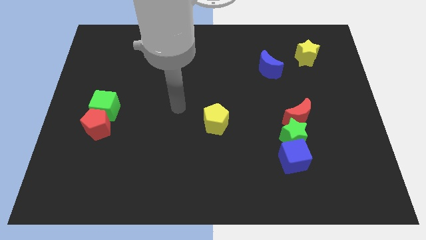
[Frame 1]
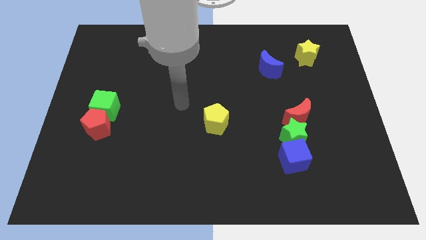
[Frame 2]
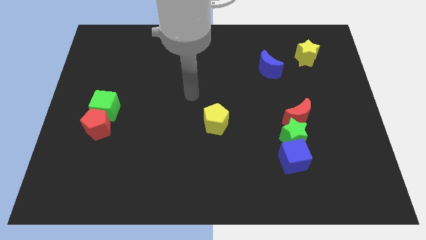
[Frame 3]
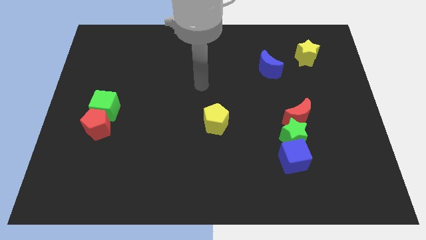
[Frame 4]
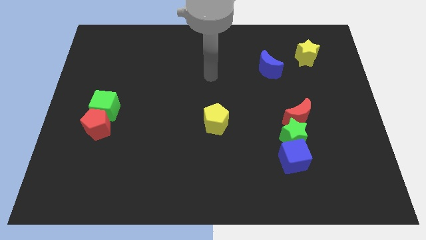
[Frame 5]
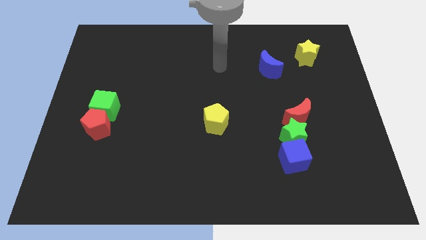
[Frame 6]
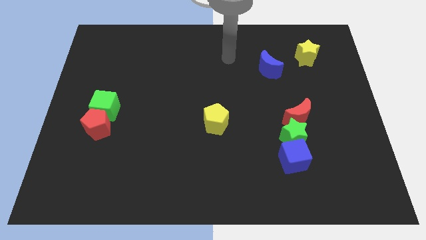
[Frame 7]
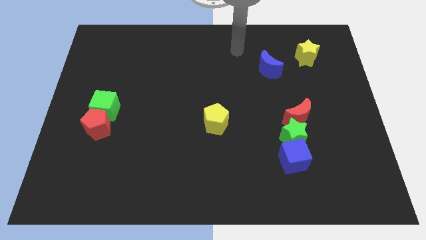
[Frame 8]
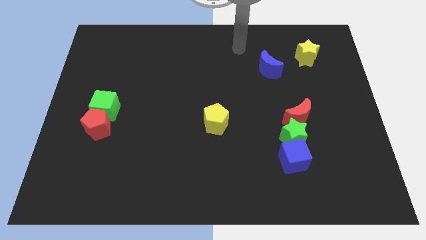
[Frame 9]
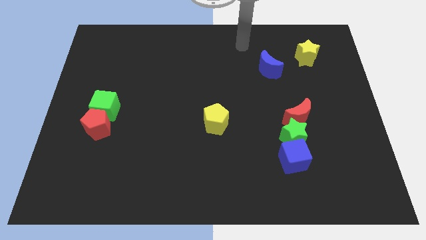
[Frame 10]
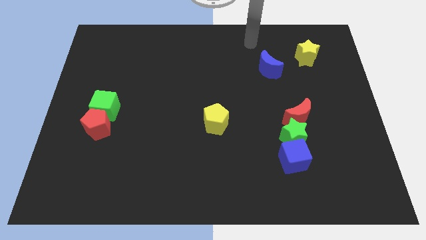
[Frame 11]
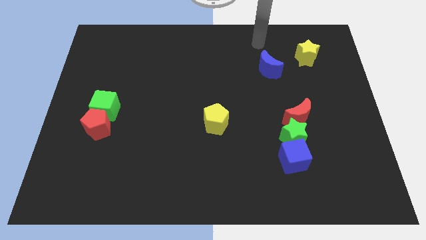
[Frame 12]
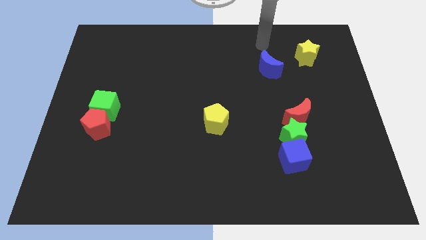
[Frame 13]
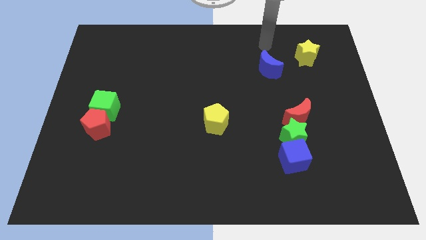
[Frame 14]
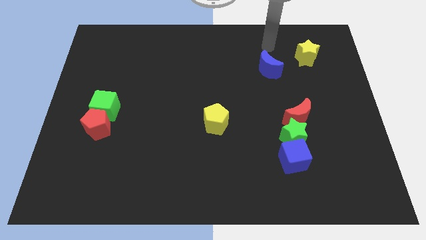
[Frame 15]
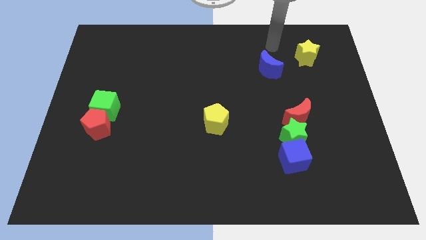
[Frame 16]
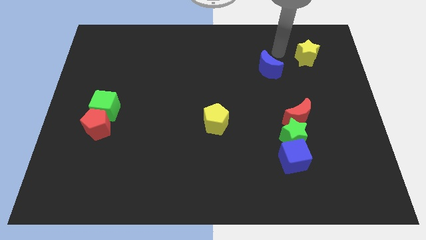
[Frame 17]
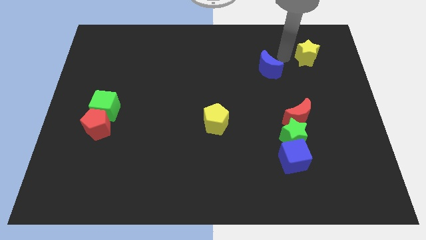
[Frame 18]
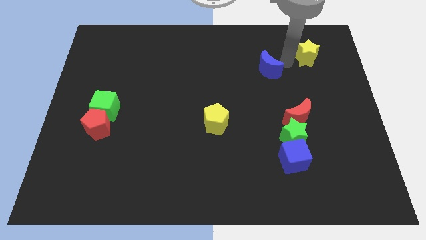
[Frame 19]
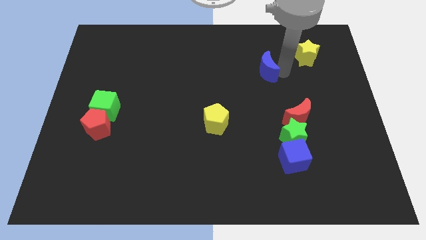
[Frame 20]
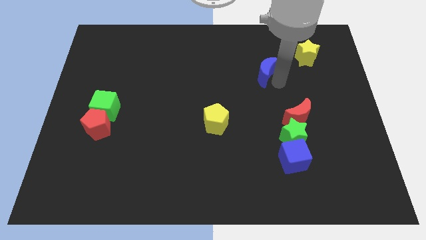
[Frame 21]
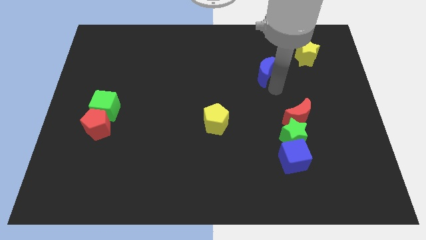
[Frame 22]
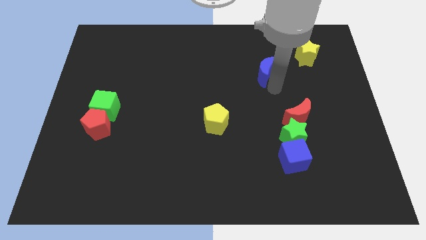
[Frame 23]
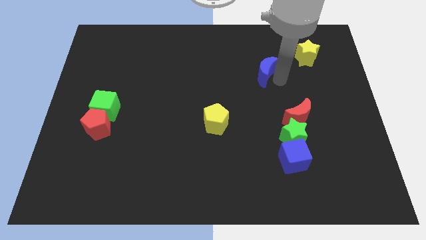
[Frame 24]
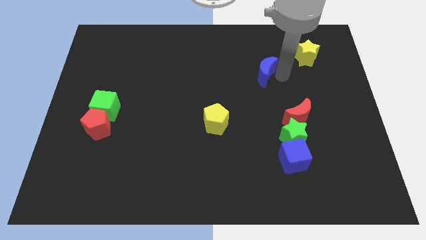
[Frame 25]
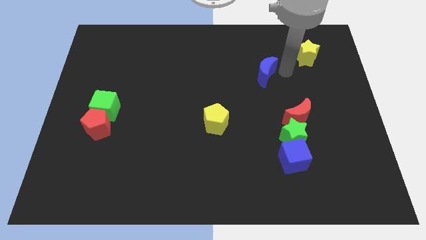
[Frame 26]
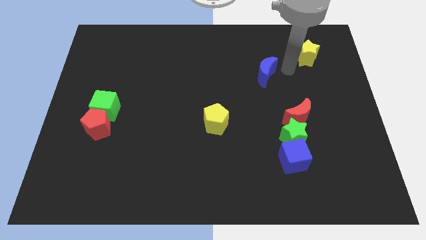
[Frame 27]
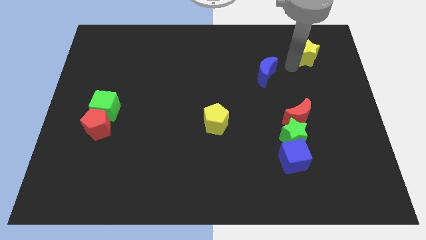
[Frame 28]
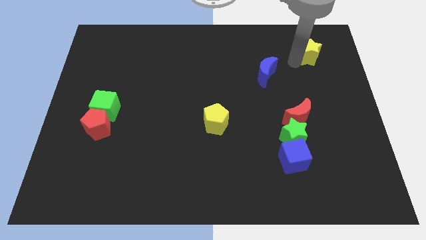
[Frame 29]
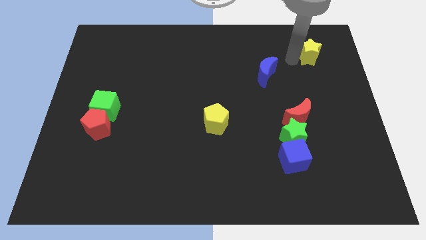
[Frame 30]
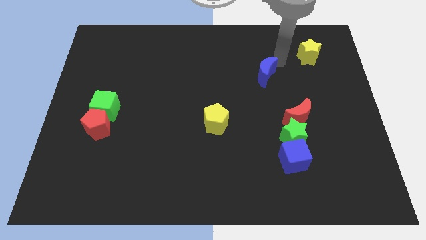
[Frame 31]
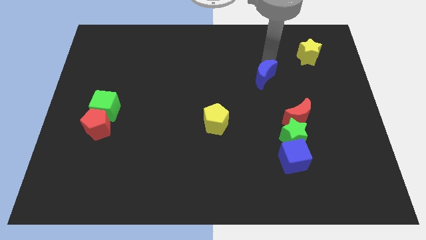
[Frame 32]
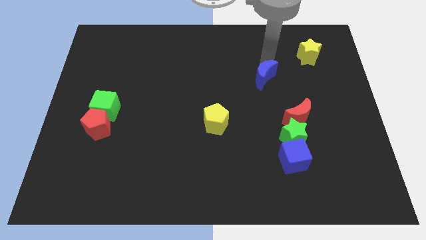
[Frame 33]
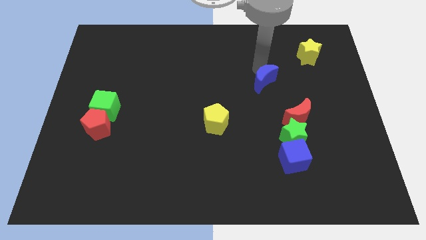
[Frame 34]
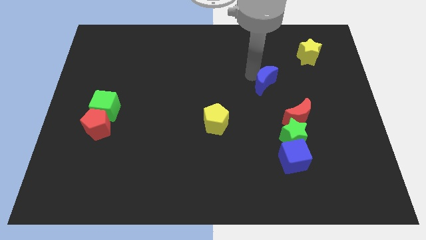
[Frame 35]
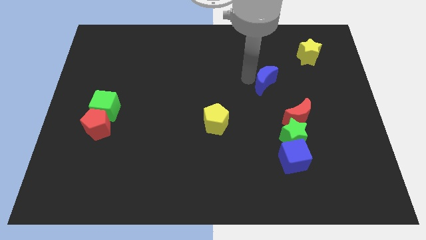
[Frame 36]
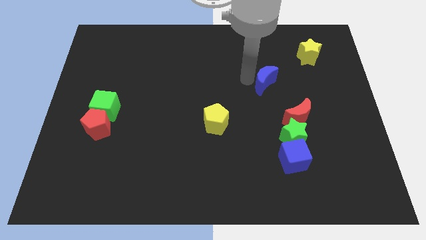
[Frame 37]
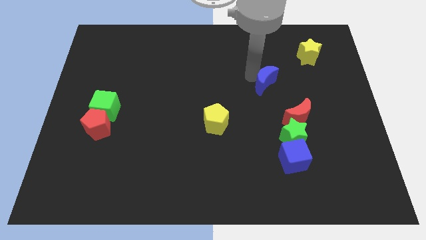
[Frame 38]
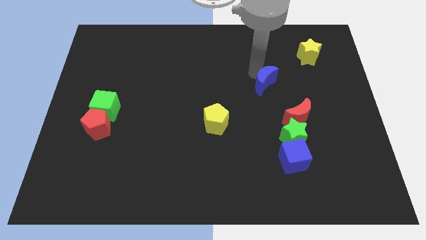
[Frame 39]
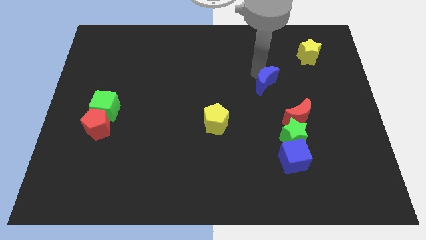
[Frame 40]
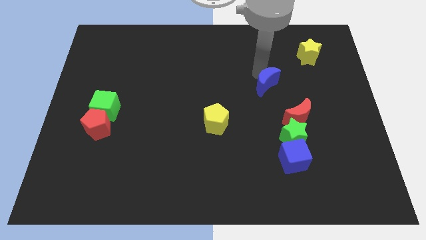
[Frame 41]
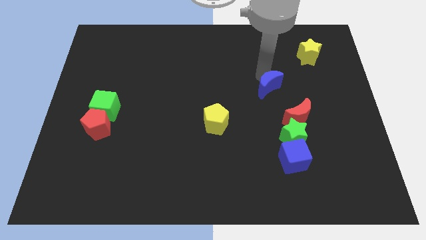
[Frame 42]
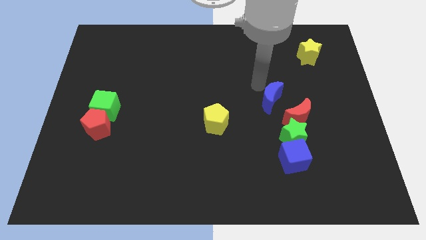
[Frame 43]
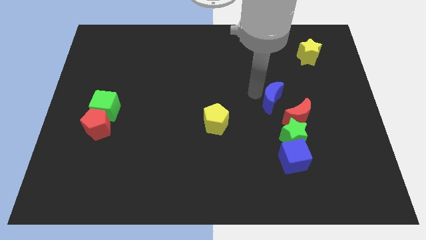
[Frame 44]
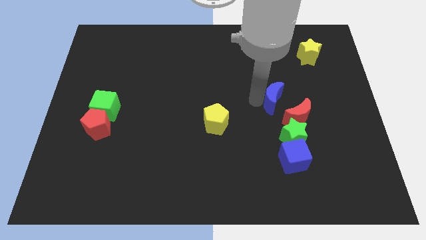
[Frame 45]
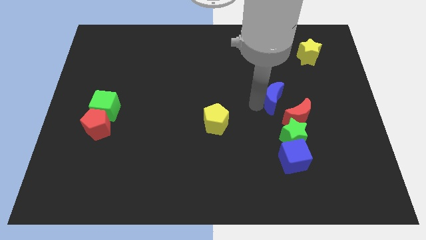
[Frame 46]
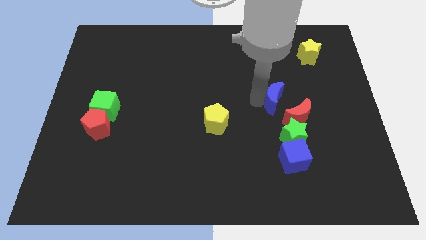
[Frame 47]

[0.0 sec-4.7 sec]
move the blue moon towards the red crescent

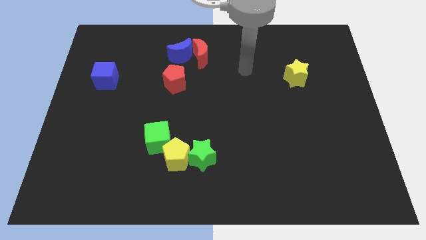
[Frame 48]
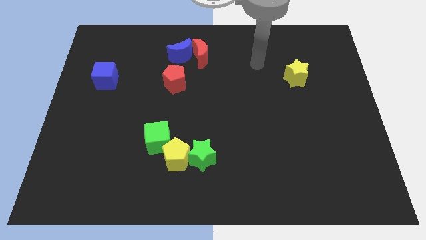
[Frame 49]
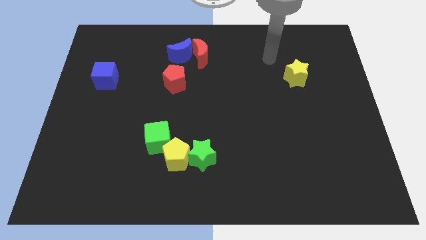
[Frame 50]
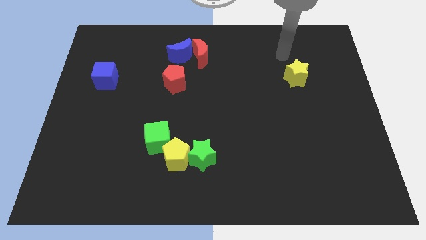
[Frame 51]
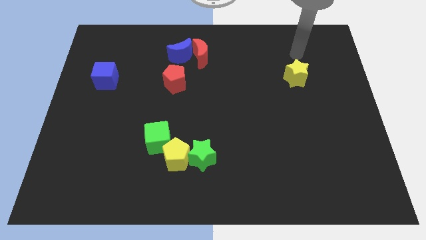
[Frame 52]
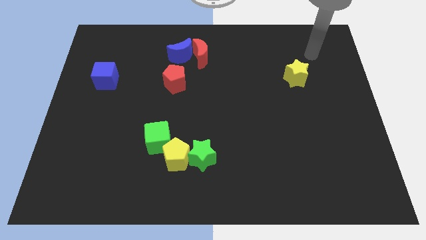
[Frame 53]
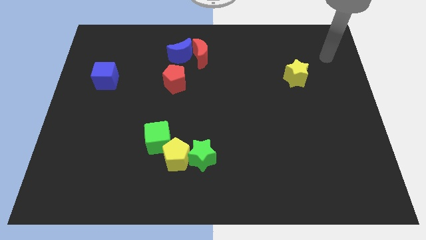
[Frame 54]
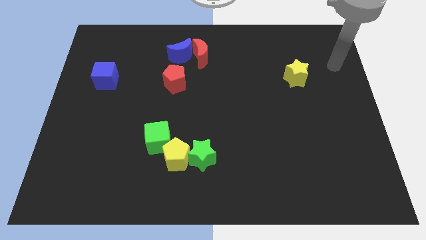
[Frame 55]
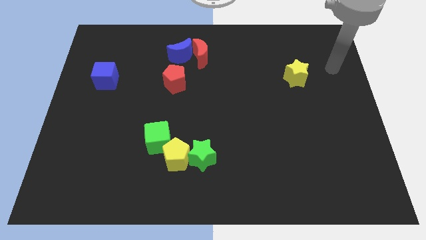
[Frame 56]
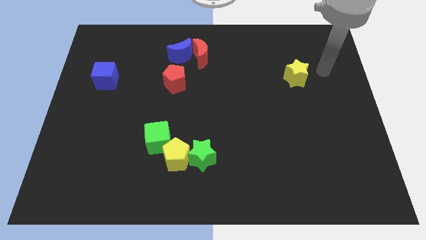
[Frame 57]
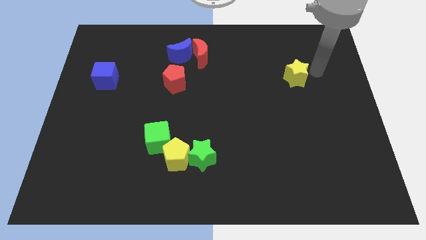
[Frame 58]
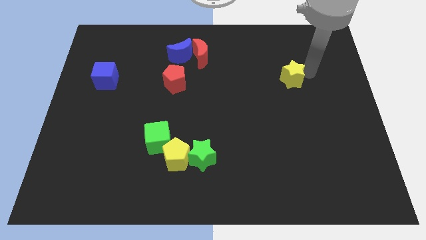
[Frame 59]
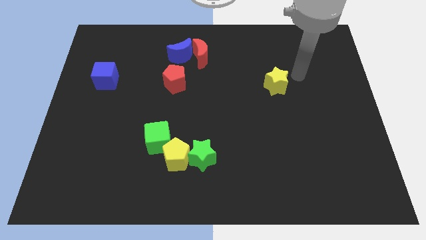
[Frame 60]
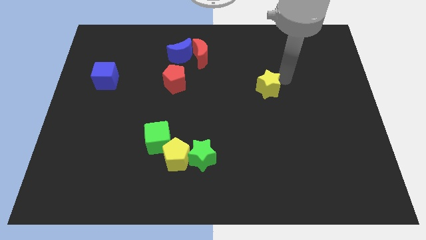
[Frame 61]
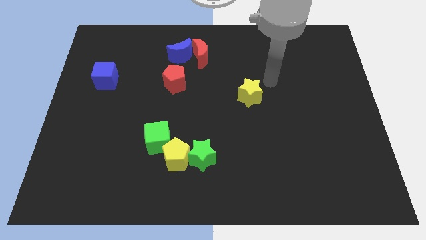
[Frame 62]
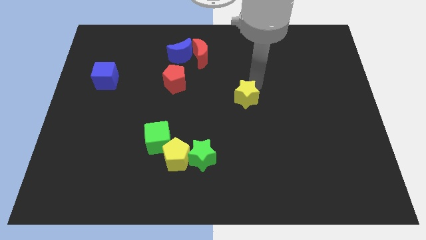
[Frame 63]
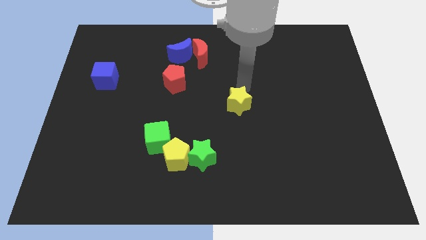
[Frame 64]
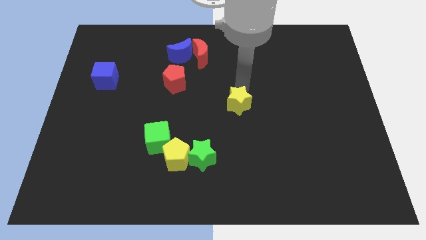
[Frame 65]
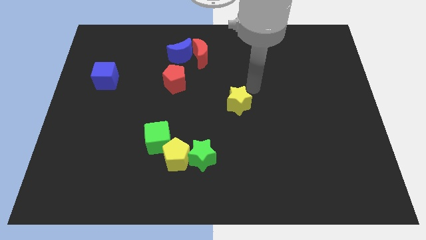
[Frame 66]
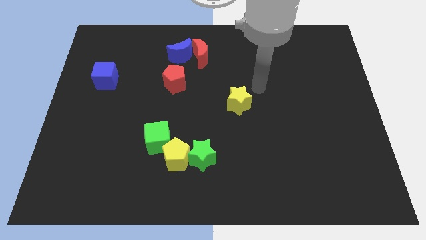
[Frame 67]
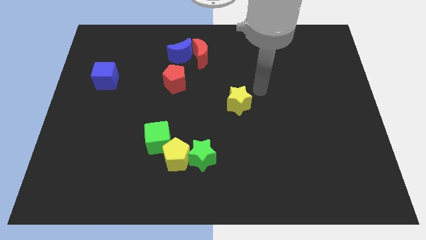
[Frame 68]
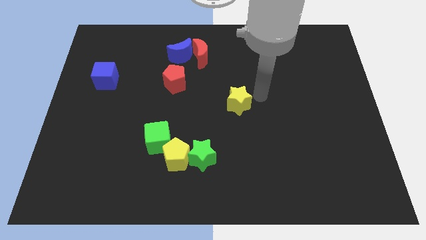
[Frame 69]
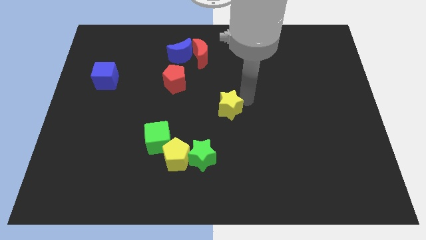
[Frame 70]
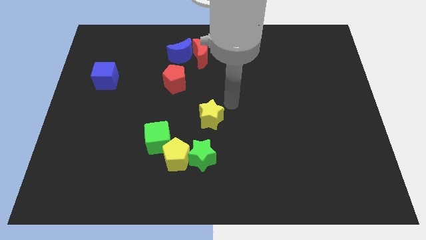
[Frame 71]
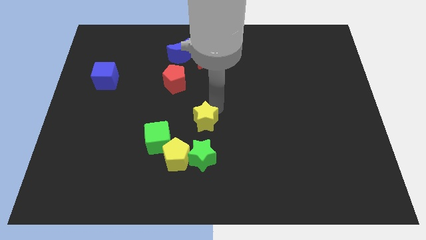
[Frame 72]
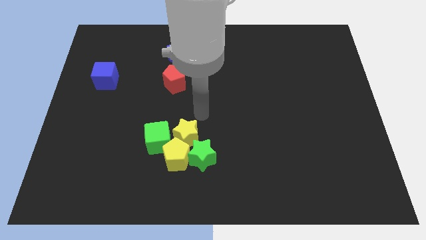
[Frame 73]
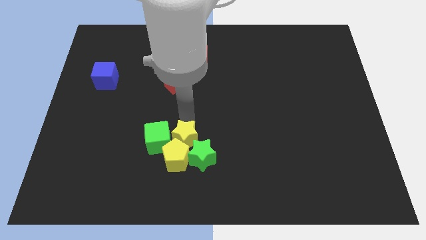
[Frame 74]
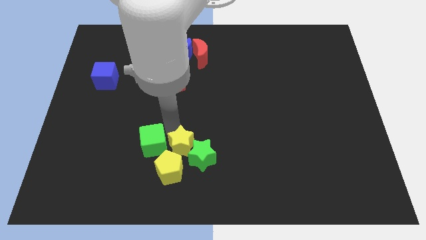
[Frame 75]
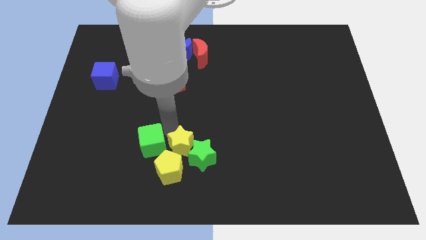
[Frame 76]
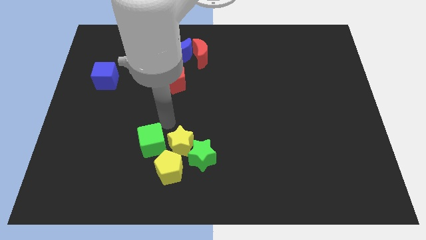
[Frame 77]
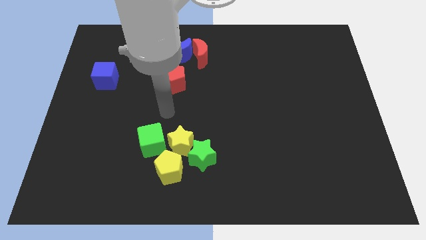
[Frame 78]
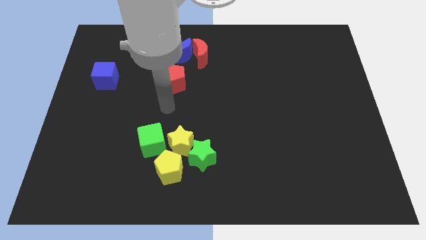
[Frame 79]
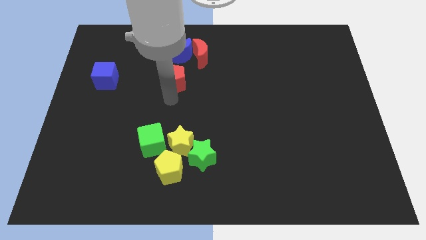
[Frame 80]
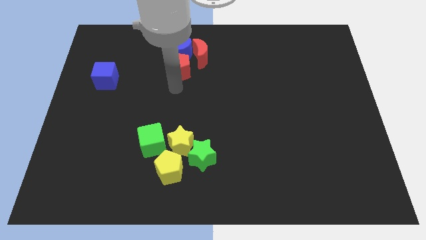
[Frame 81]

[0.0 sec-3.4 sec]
push the yellow star into the yellow pentagon

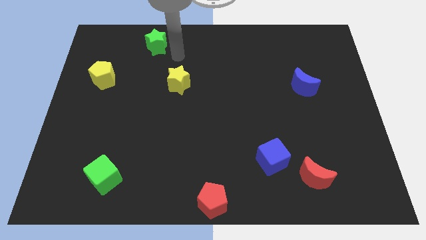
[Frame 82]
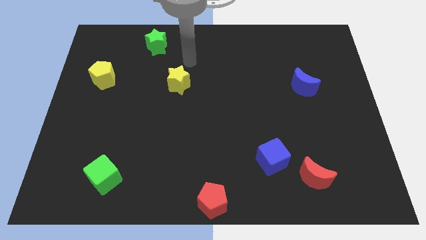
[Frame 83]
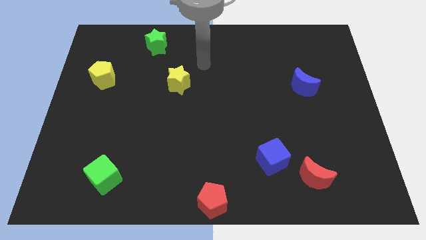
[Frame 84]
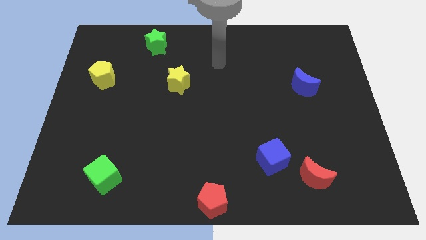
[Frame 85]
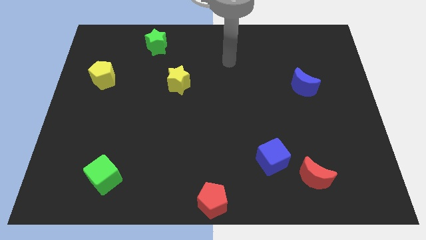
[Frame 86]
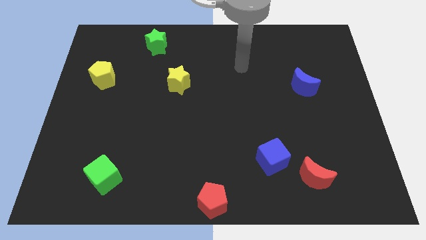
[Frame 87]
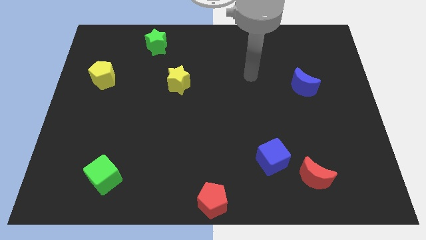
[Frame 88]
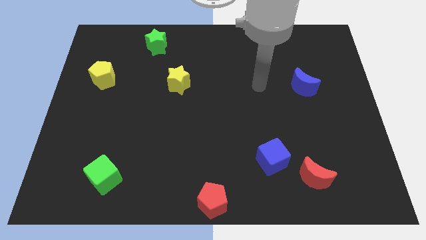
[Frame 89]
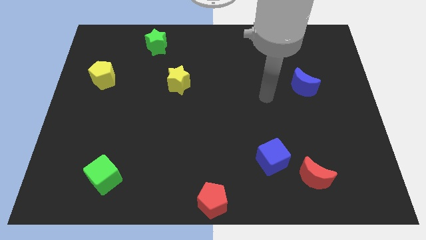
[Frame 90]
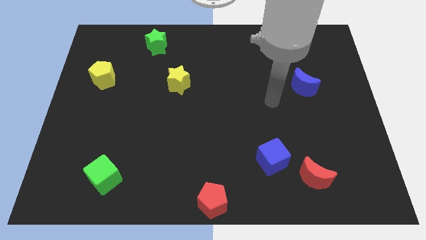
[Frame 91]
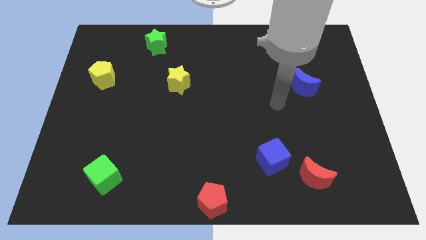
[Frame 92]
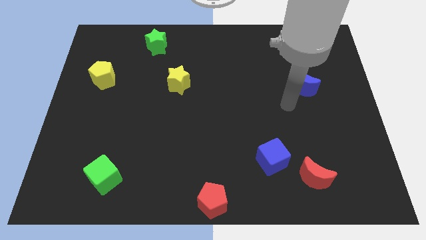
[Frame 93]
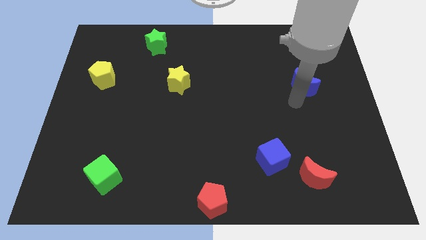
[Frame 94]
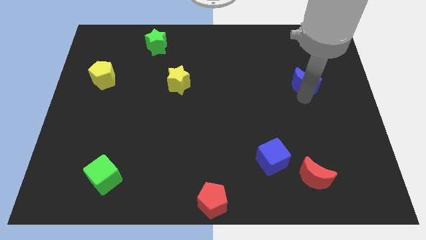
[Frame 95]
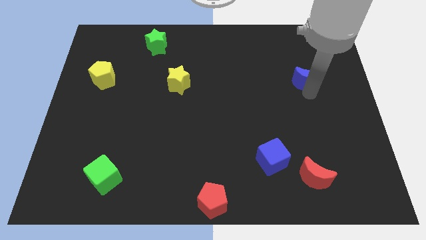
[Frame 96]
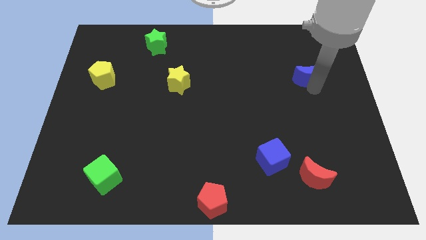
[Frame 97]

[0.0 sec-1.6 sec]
touch the bottom side of the blue crescent
